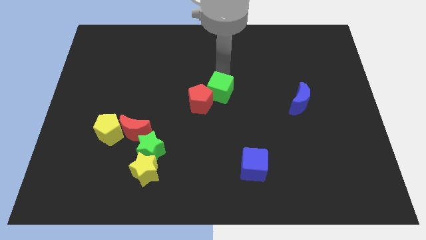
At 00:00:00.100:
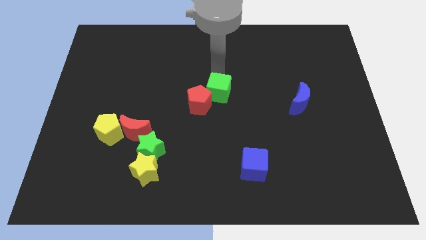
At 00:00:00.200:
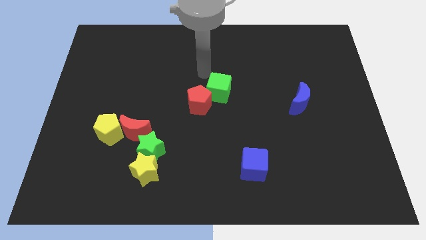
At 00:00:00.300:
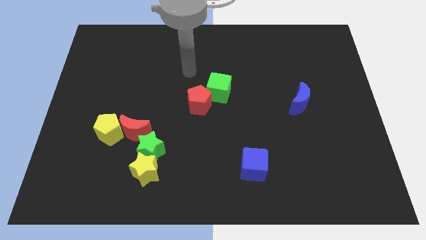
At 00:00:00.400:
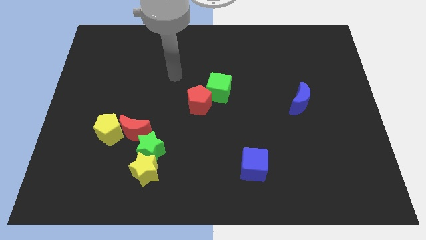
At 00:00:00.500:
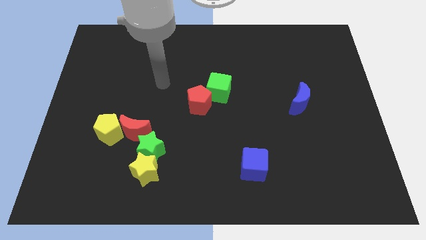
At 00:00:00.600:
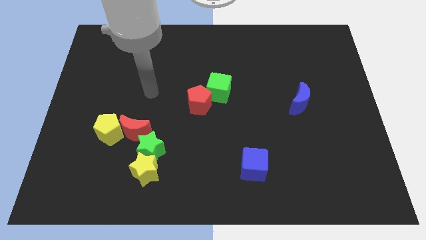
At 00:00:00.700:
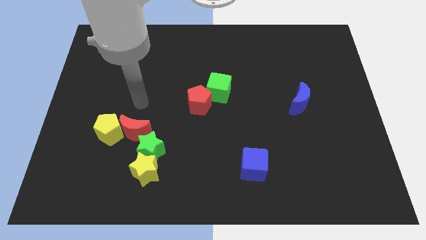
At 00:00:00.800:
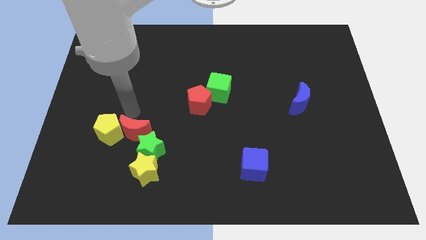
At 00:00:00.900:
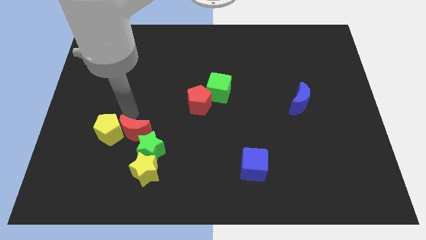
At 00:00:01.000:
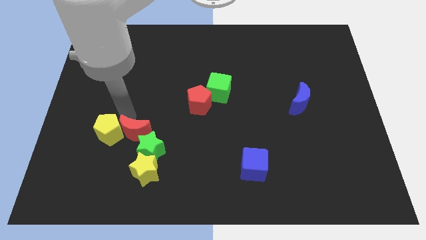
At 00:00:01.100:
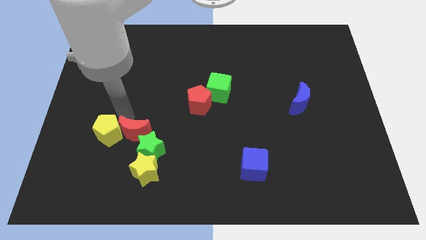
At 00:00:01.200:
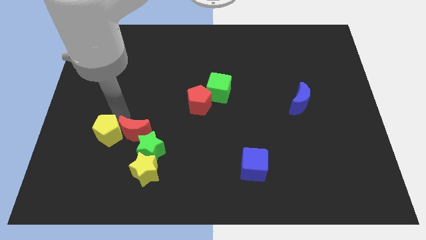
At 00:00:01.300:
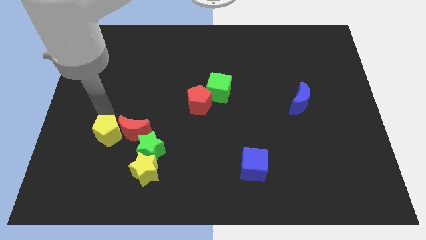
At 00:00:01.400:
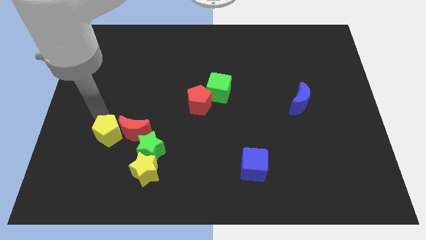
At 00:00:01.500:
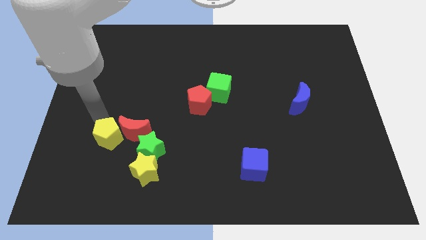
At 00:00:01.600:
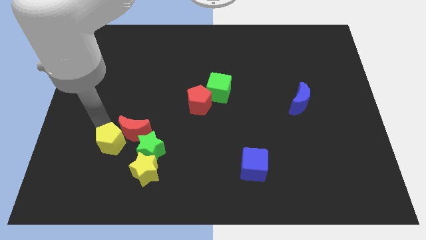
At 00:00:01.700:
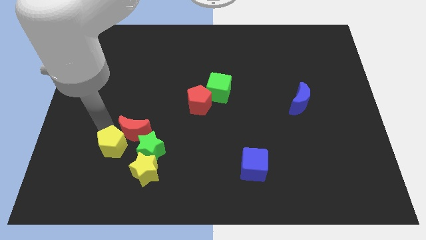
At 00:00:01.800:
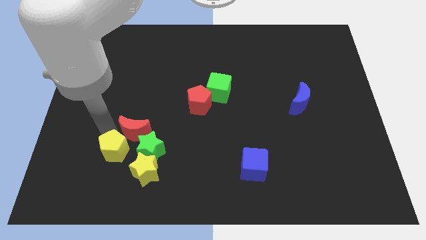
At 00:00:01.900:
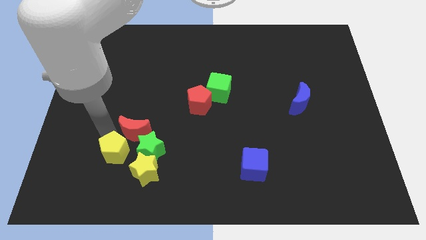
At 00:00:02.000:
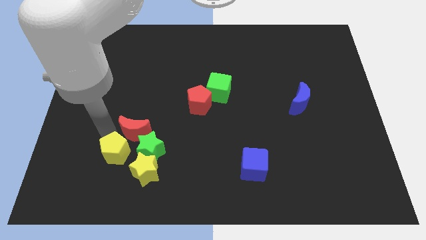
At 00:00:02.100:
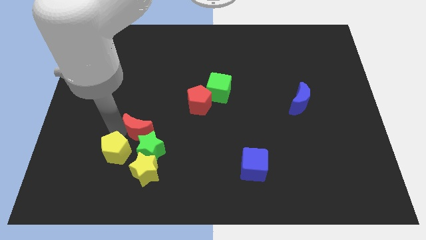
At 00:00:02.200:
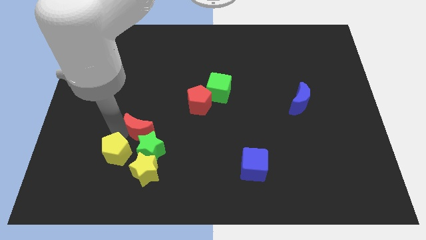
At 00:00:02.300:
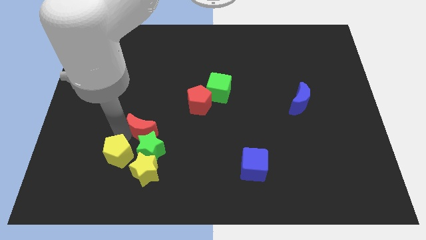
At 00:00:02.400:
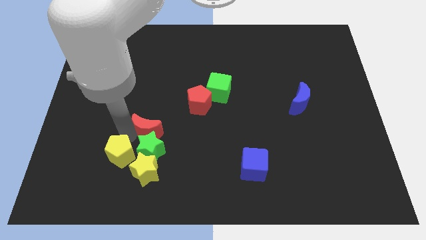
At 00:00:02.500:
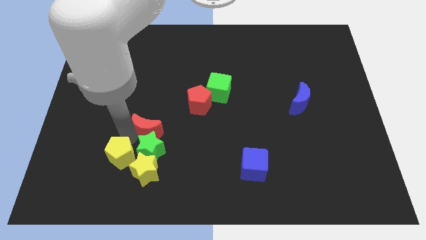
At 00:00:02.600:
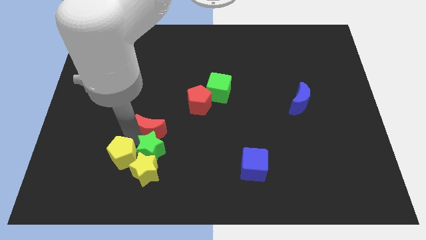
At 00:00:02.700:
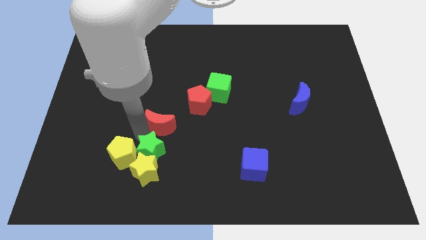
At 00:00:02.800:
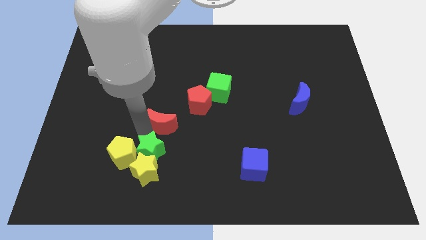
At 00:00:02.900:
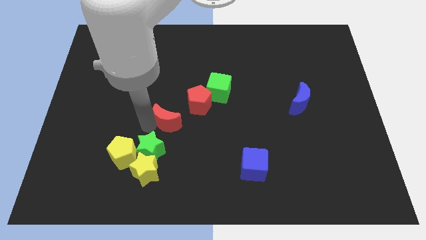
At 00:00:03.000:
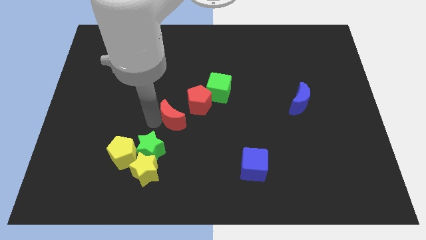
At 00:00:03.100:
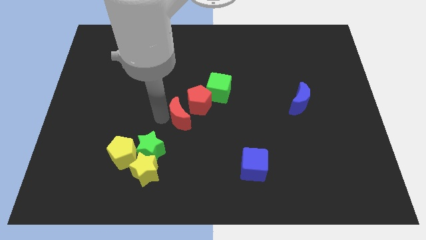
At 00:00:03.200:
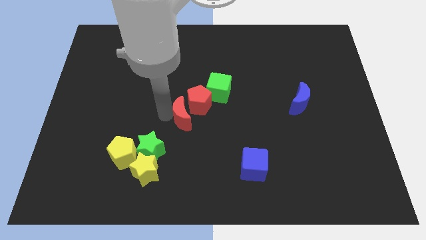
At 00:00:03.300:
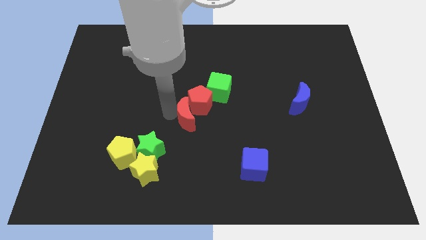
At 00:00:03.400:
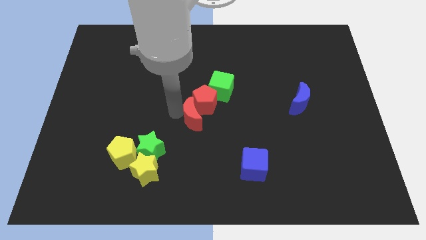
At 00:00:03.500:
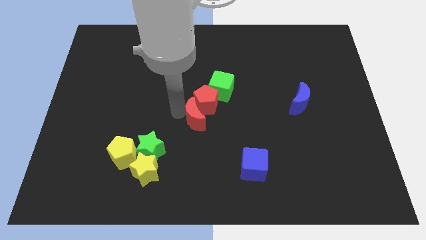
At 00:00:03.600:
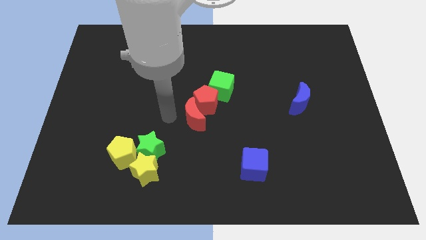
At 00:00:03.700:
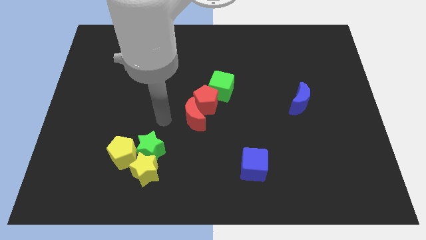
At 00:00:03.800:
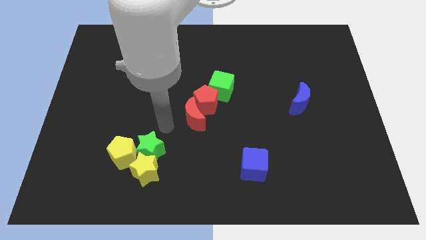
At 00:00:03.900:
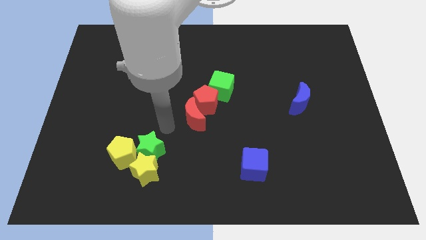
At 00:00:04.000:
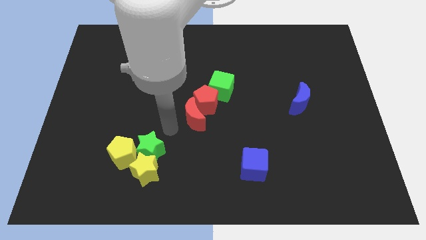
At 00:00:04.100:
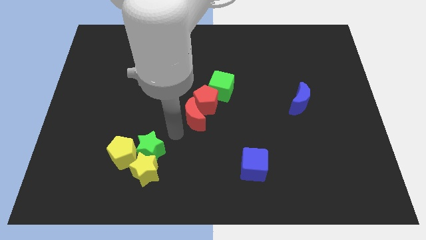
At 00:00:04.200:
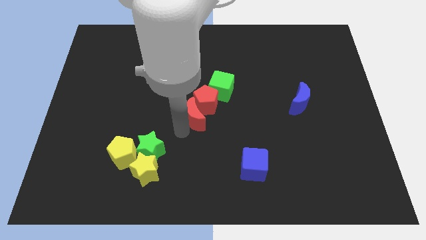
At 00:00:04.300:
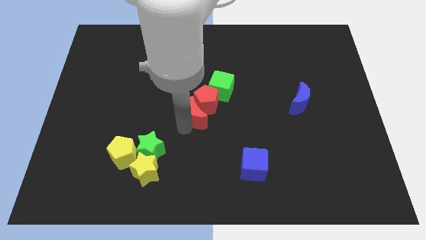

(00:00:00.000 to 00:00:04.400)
push the red crescent into the red pentagon

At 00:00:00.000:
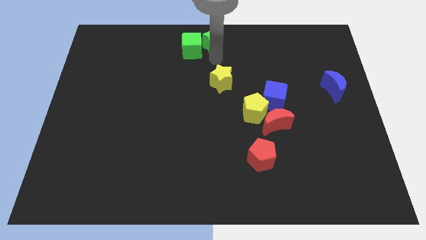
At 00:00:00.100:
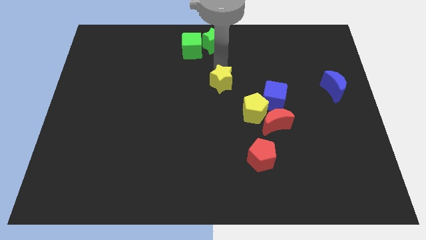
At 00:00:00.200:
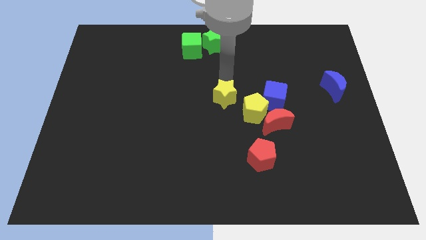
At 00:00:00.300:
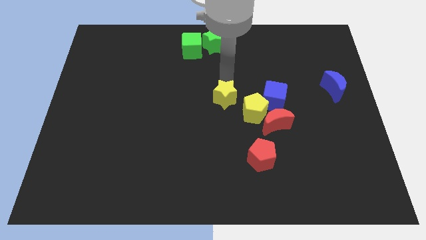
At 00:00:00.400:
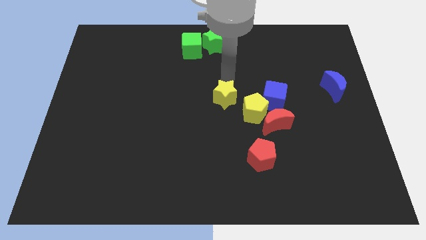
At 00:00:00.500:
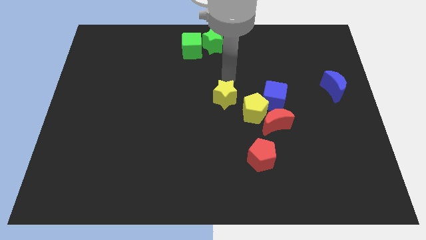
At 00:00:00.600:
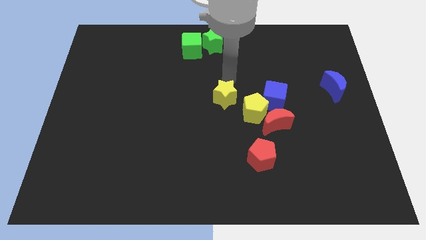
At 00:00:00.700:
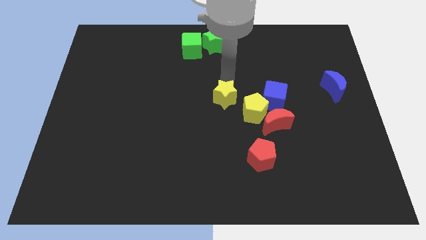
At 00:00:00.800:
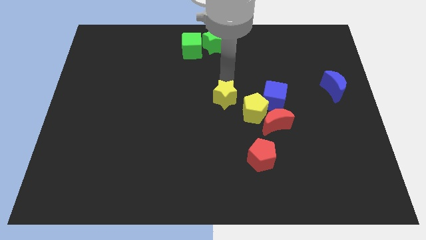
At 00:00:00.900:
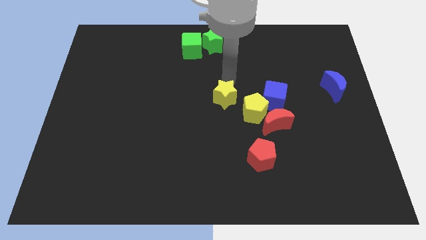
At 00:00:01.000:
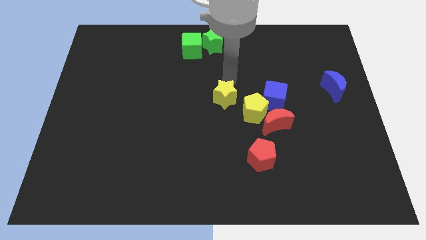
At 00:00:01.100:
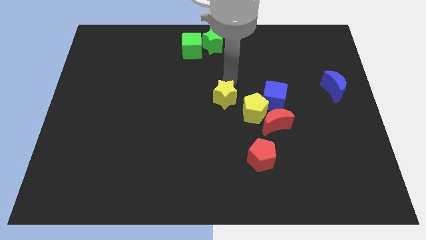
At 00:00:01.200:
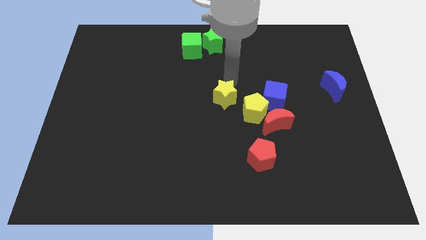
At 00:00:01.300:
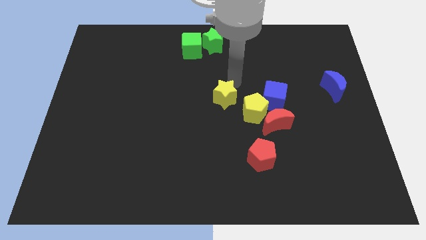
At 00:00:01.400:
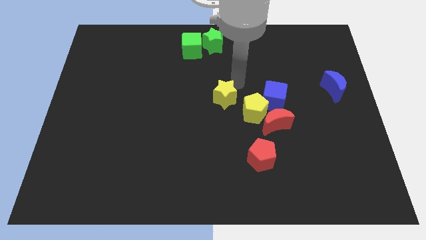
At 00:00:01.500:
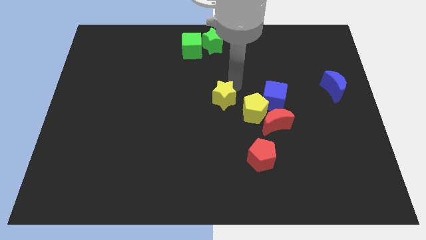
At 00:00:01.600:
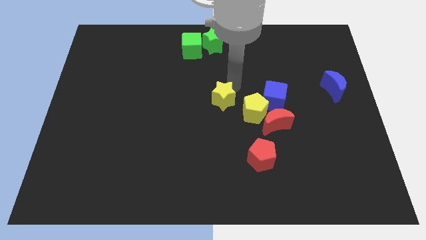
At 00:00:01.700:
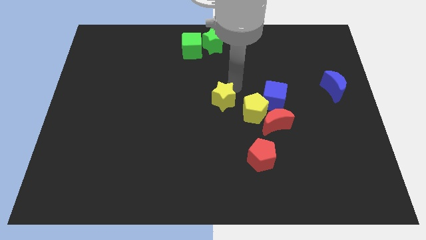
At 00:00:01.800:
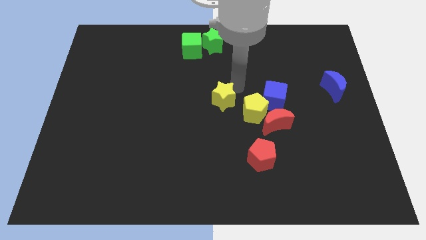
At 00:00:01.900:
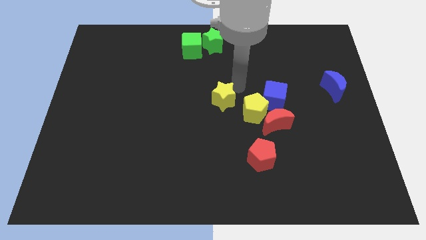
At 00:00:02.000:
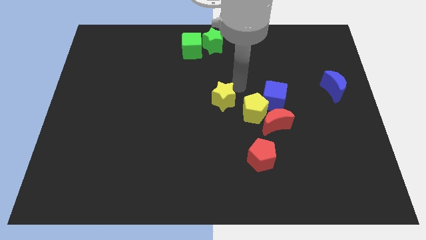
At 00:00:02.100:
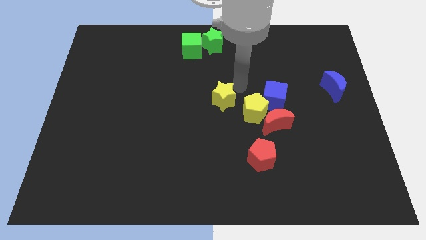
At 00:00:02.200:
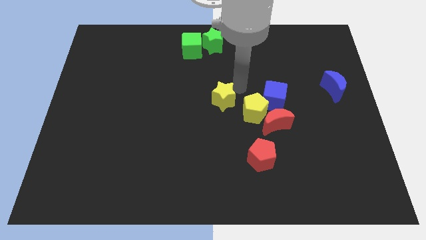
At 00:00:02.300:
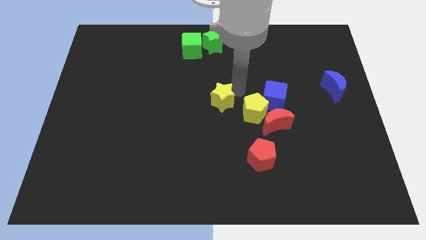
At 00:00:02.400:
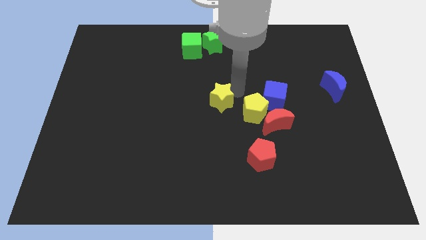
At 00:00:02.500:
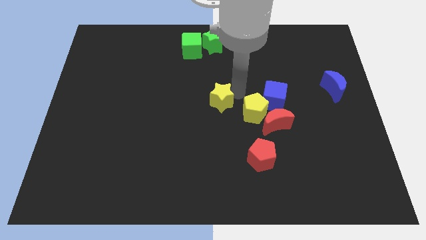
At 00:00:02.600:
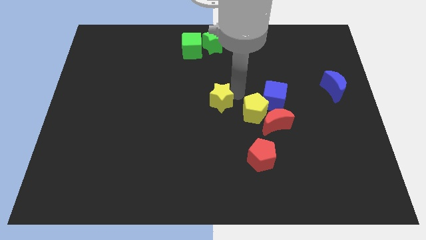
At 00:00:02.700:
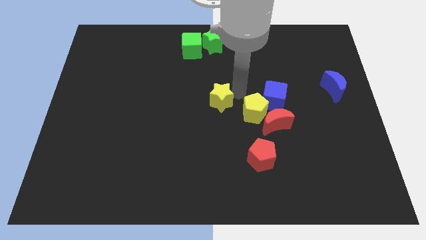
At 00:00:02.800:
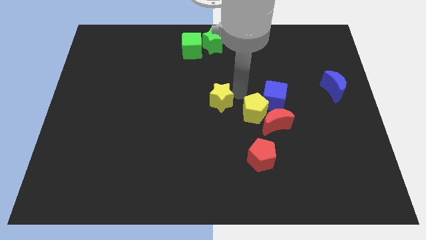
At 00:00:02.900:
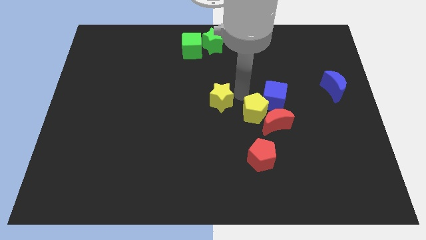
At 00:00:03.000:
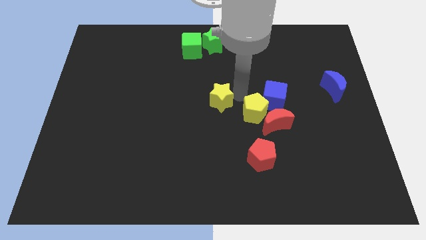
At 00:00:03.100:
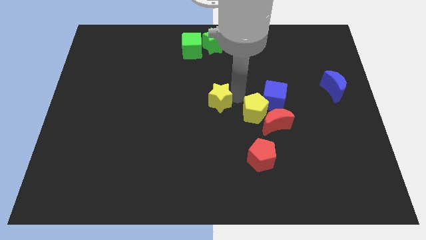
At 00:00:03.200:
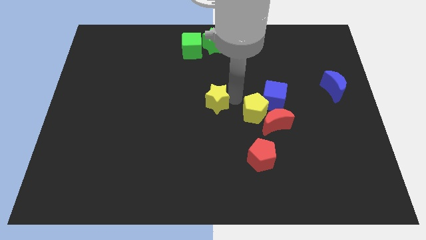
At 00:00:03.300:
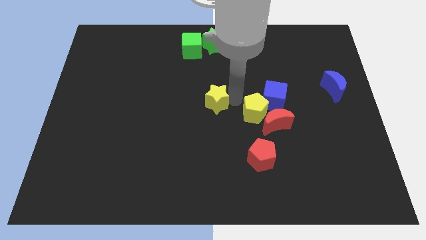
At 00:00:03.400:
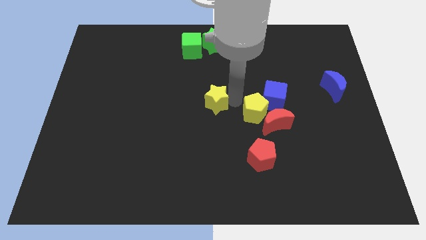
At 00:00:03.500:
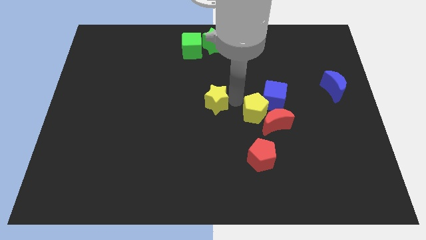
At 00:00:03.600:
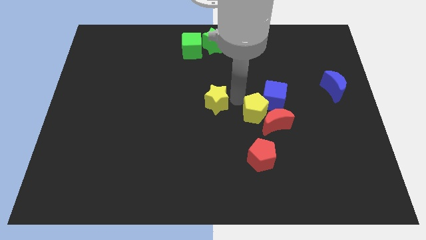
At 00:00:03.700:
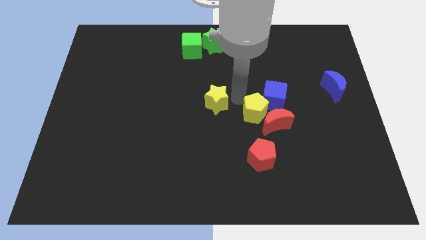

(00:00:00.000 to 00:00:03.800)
adjust the yellow star vertically below the greenstar

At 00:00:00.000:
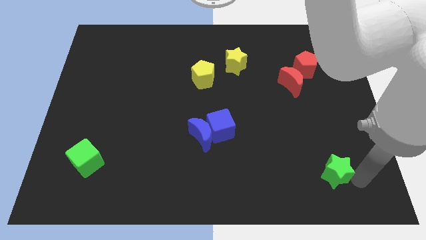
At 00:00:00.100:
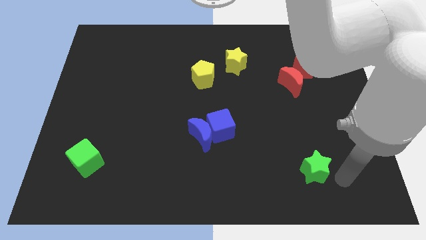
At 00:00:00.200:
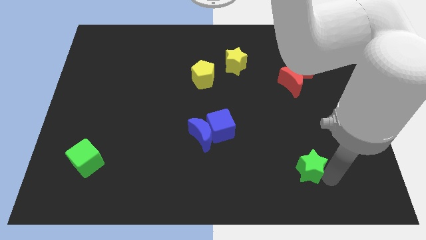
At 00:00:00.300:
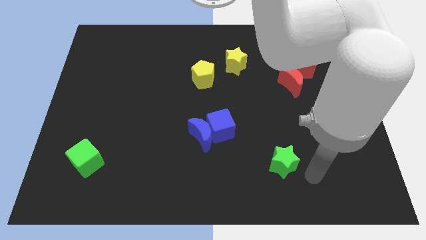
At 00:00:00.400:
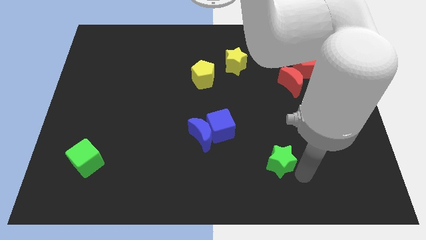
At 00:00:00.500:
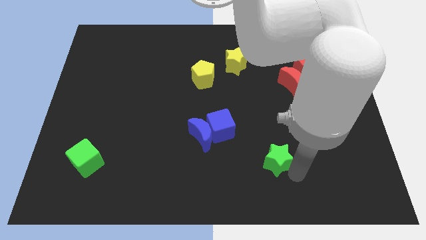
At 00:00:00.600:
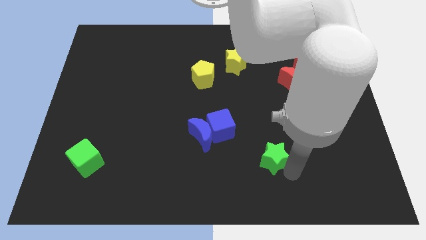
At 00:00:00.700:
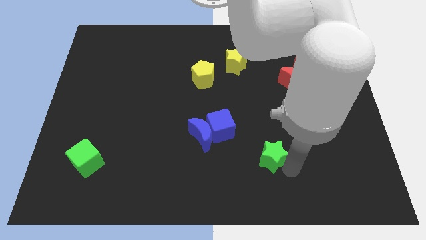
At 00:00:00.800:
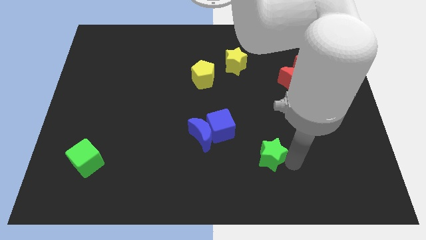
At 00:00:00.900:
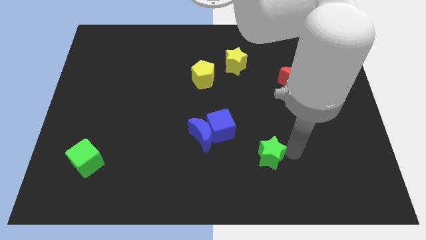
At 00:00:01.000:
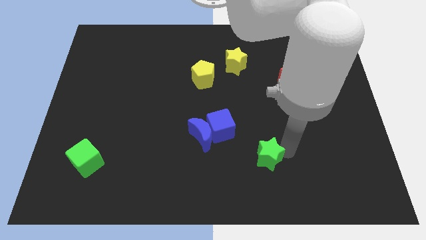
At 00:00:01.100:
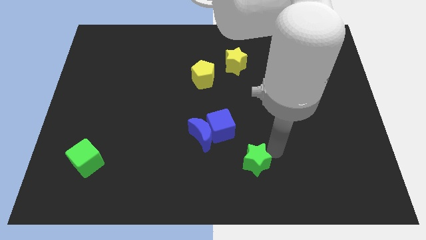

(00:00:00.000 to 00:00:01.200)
move the green star parallel to green cube
